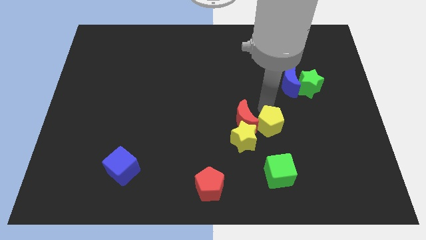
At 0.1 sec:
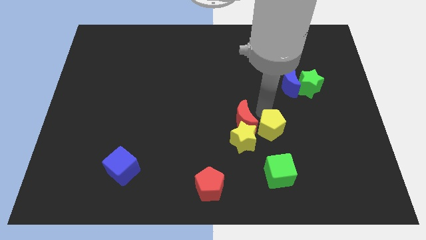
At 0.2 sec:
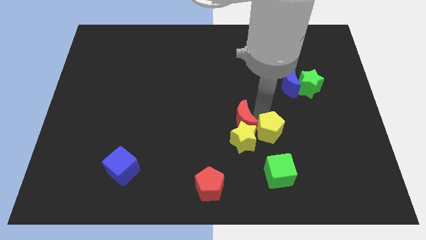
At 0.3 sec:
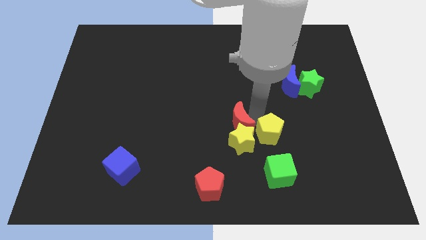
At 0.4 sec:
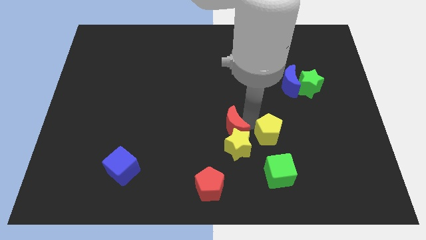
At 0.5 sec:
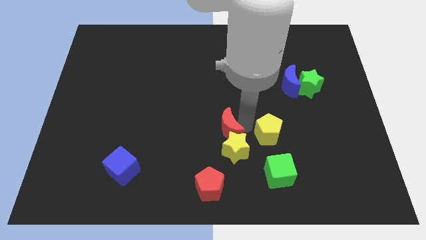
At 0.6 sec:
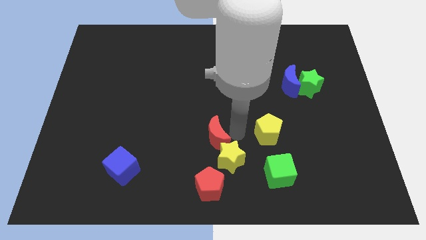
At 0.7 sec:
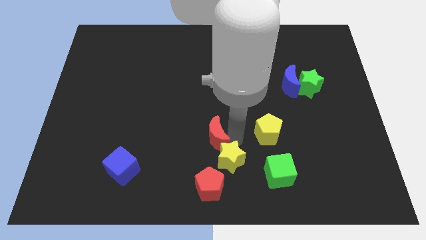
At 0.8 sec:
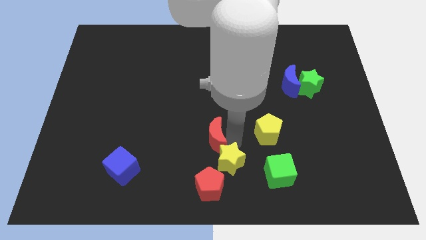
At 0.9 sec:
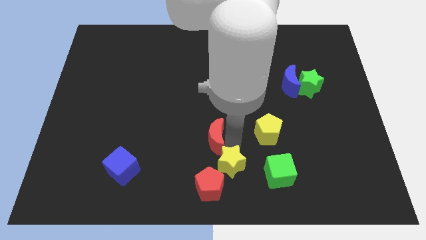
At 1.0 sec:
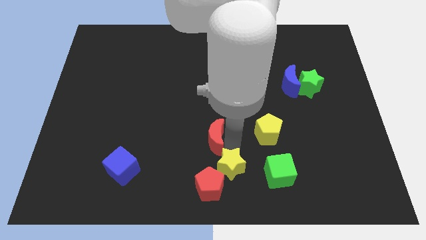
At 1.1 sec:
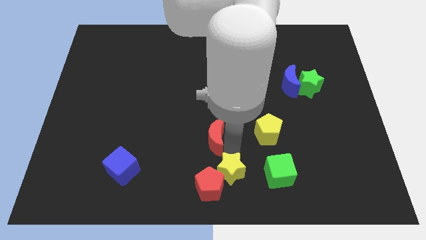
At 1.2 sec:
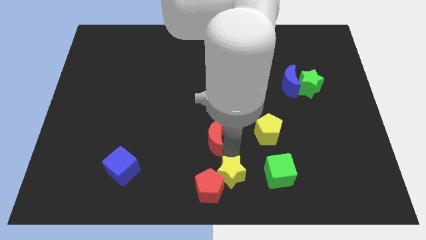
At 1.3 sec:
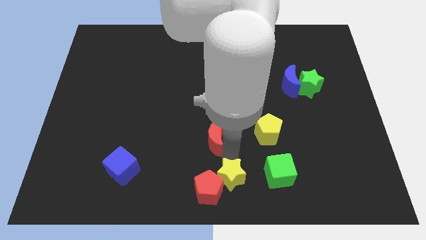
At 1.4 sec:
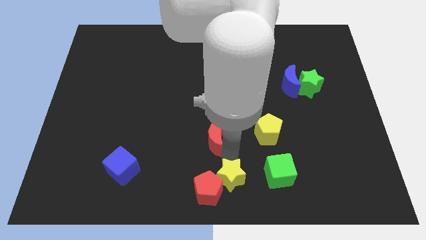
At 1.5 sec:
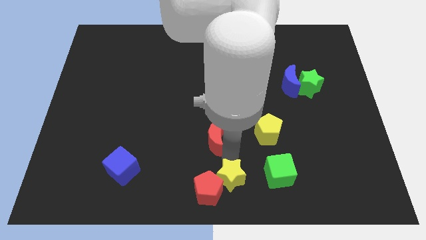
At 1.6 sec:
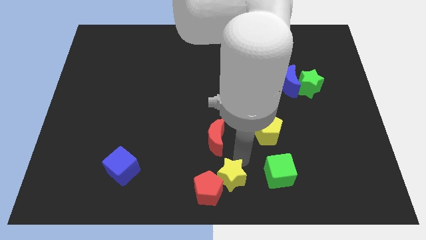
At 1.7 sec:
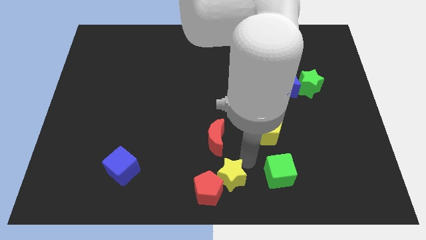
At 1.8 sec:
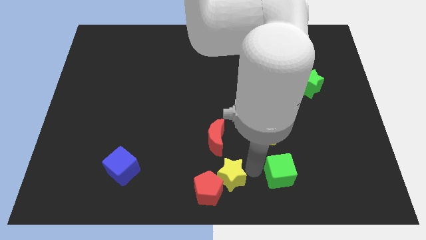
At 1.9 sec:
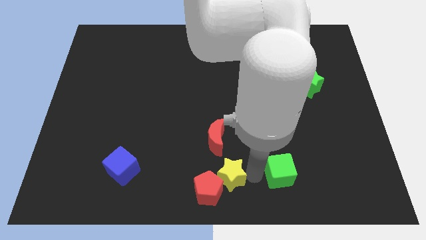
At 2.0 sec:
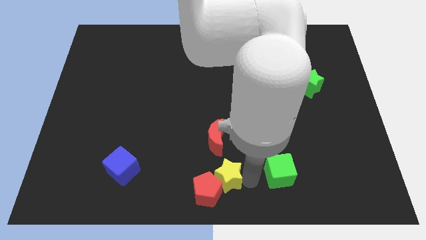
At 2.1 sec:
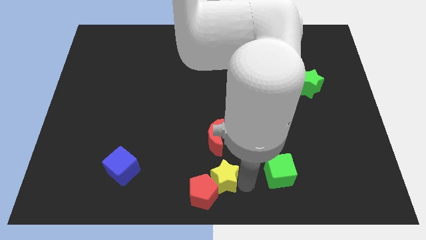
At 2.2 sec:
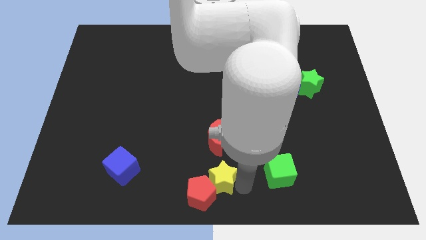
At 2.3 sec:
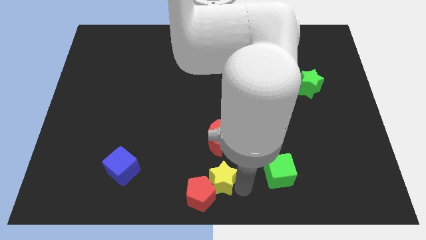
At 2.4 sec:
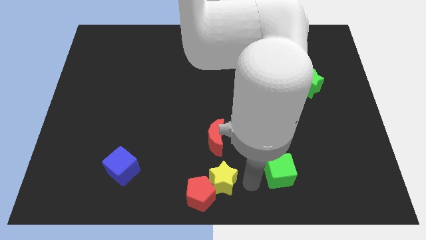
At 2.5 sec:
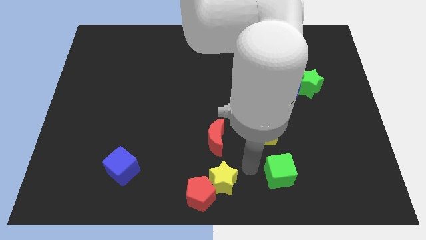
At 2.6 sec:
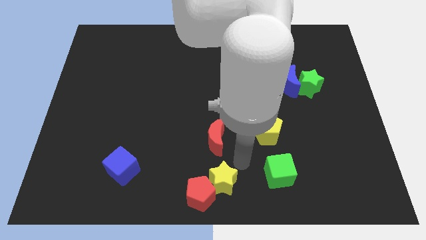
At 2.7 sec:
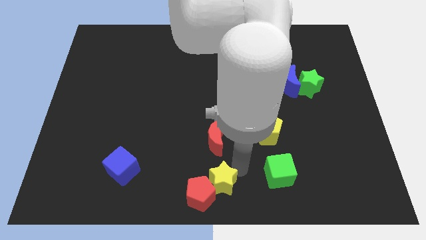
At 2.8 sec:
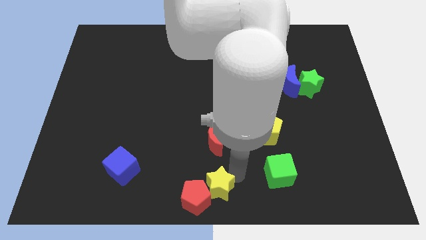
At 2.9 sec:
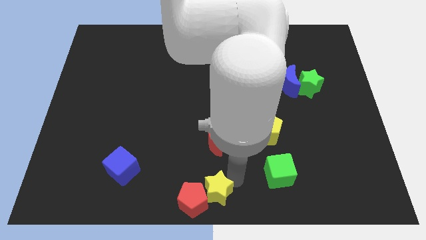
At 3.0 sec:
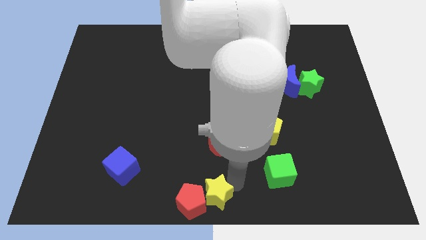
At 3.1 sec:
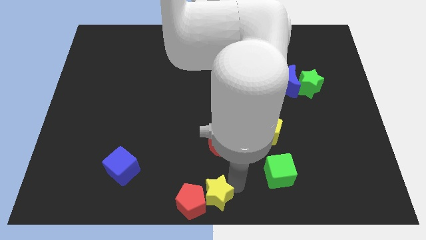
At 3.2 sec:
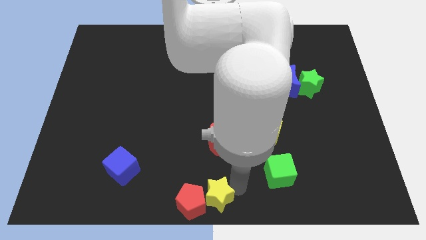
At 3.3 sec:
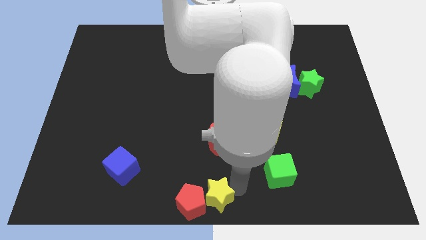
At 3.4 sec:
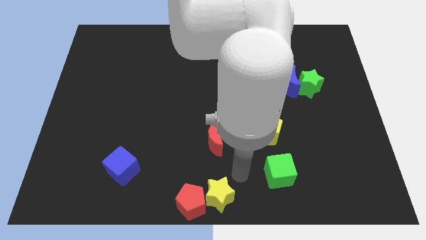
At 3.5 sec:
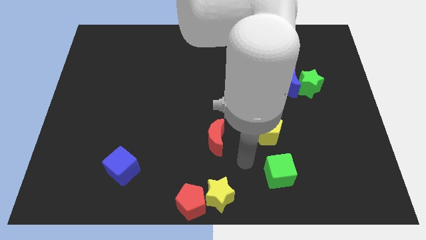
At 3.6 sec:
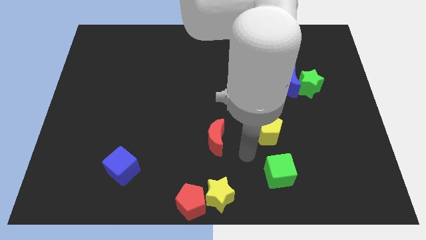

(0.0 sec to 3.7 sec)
place yellow star to the bottom center of the board

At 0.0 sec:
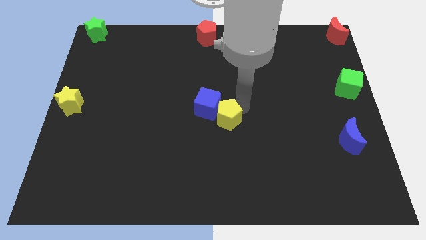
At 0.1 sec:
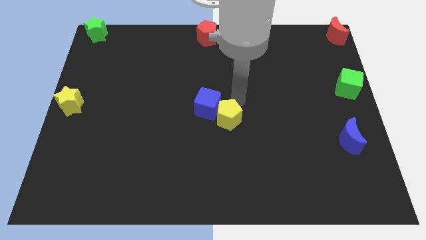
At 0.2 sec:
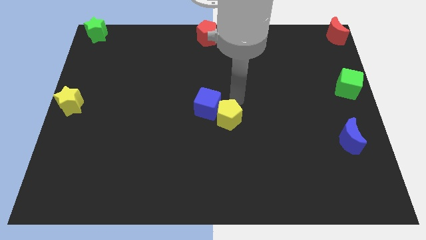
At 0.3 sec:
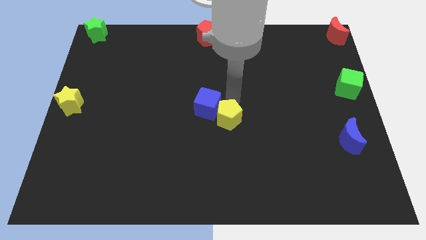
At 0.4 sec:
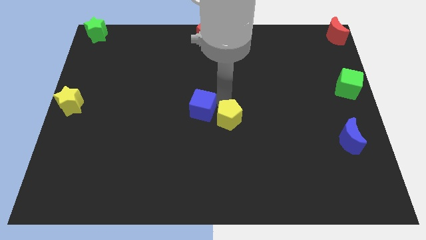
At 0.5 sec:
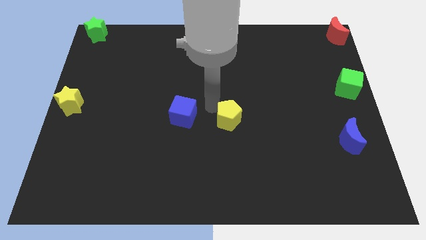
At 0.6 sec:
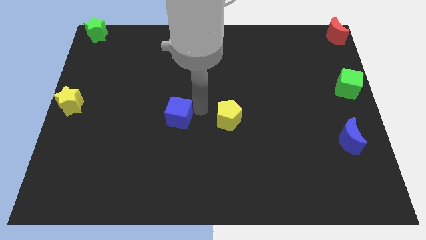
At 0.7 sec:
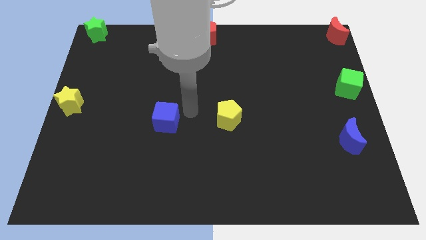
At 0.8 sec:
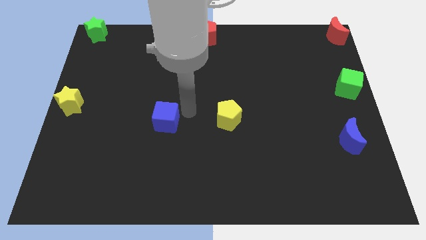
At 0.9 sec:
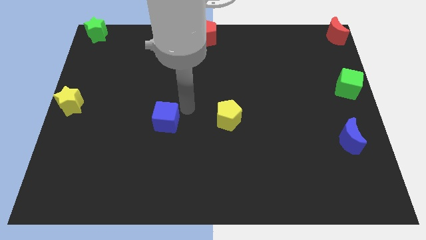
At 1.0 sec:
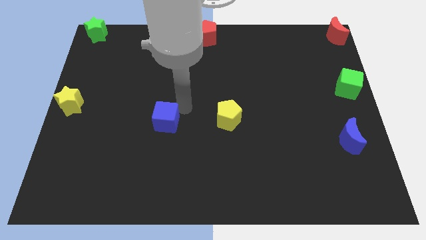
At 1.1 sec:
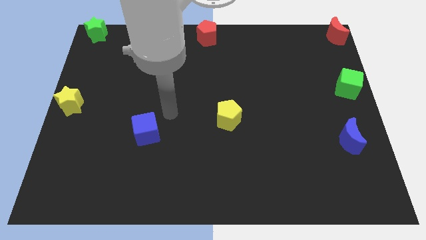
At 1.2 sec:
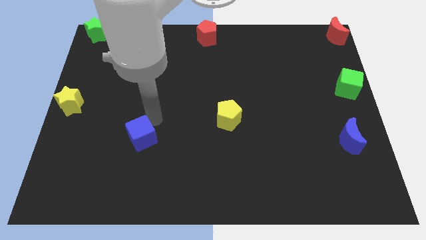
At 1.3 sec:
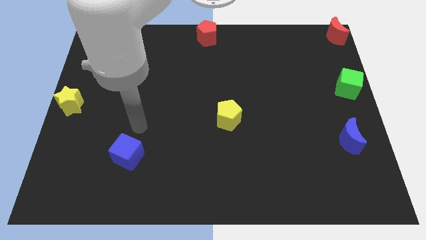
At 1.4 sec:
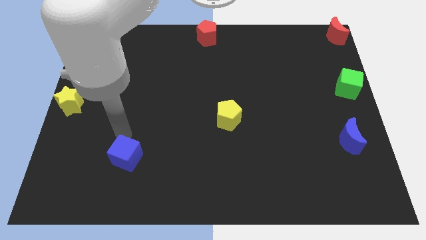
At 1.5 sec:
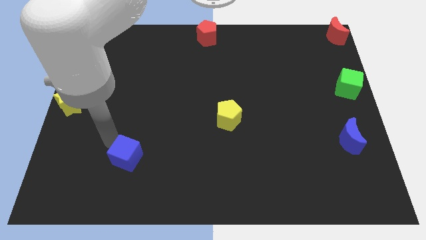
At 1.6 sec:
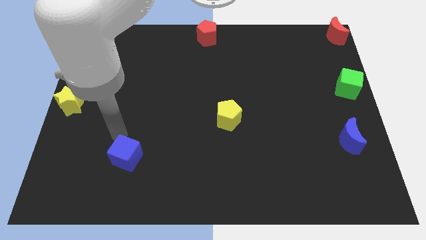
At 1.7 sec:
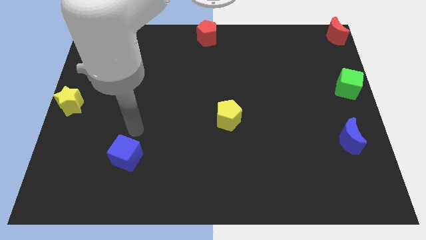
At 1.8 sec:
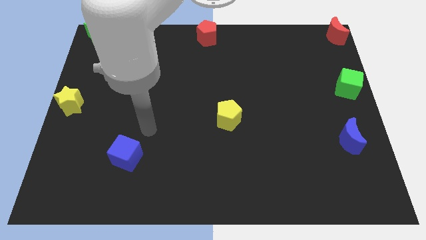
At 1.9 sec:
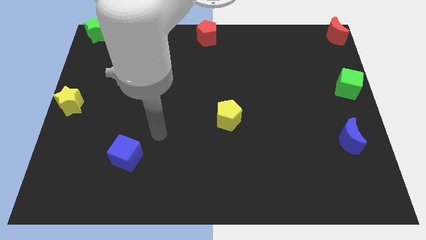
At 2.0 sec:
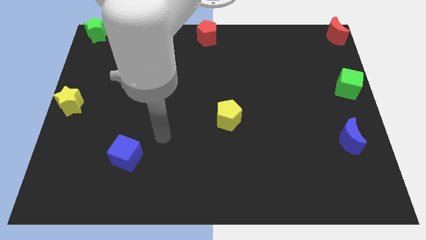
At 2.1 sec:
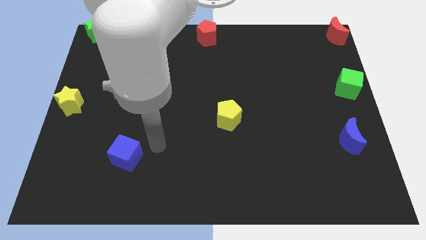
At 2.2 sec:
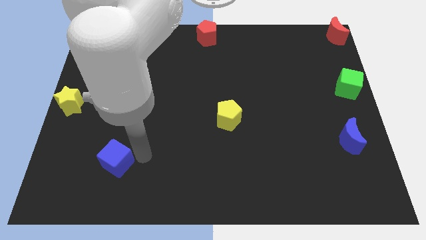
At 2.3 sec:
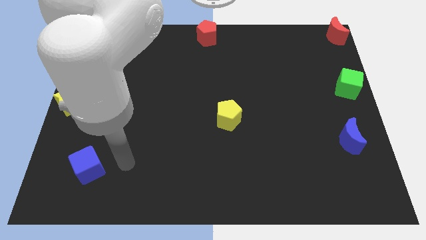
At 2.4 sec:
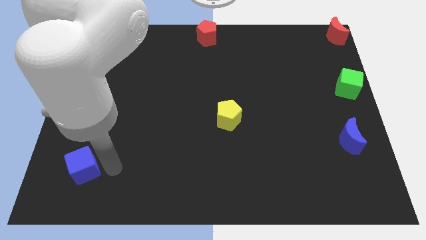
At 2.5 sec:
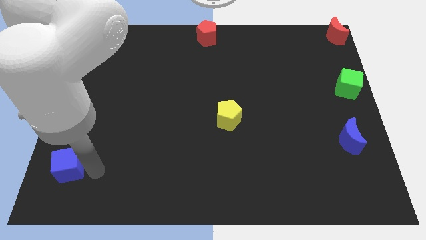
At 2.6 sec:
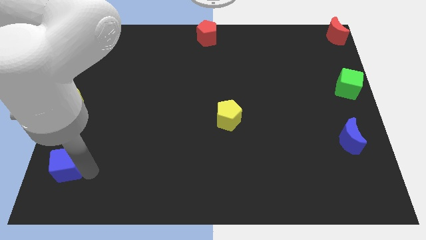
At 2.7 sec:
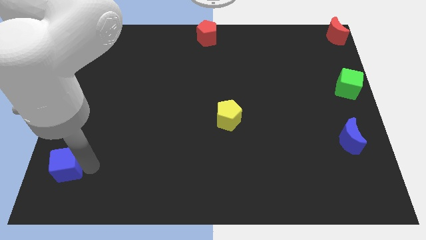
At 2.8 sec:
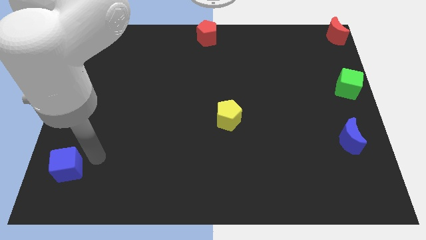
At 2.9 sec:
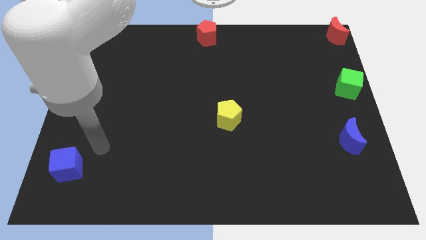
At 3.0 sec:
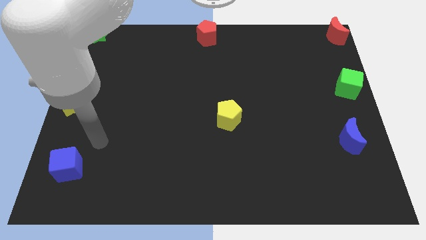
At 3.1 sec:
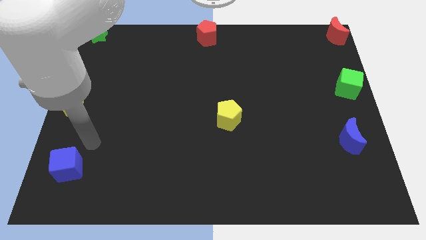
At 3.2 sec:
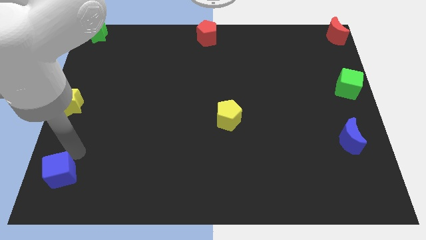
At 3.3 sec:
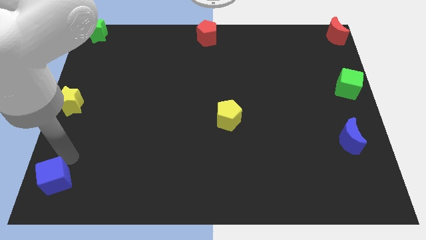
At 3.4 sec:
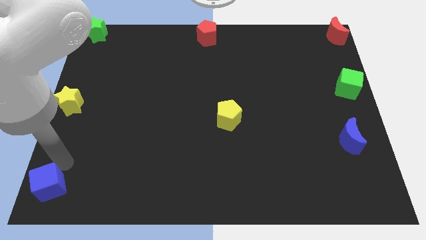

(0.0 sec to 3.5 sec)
separate blue cube from yellow pentagon

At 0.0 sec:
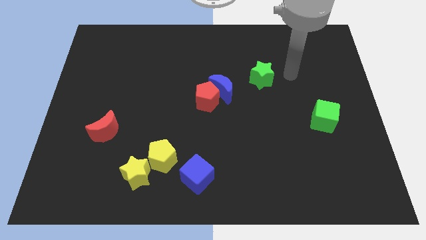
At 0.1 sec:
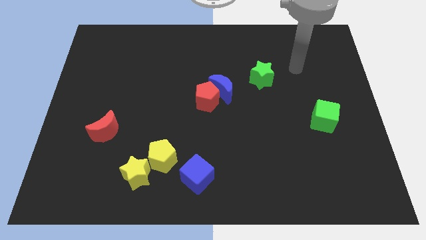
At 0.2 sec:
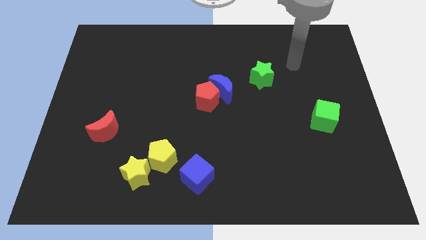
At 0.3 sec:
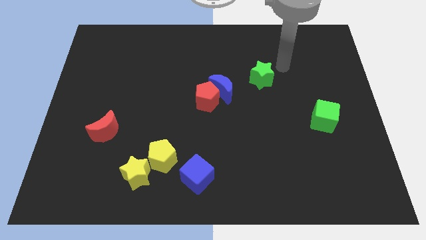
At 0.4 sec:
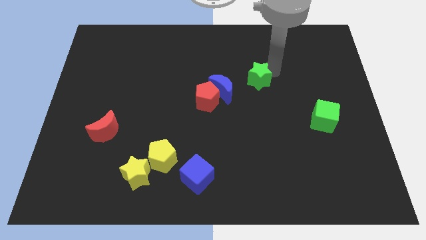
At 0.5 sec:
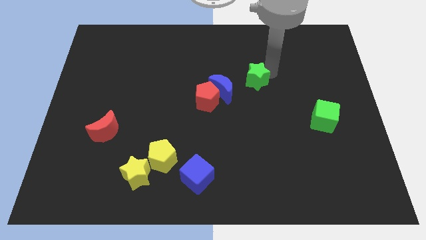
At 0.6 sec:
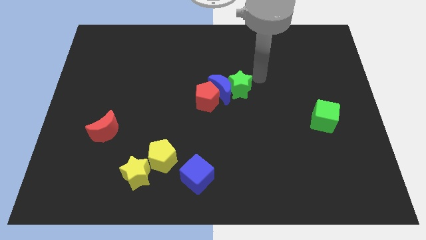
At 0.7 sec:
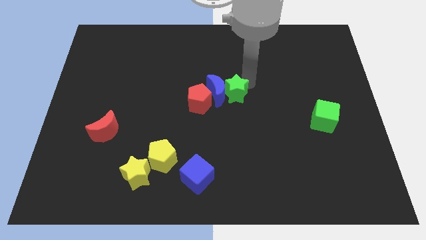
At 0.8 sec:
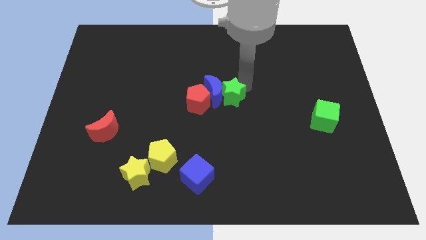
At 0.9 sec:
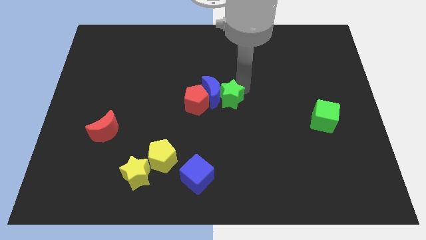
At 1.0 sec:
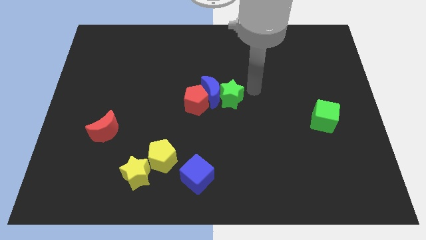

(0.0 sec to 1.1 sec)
move the green star to the right of the blue crescent

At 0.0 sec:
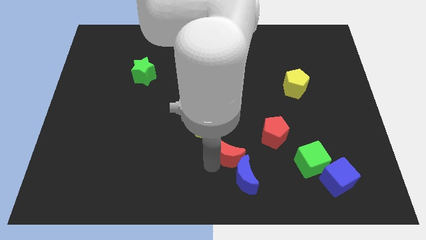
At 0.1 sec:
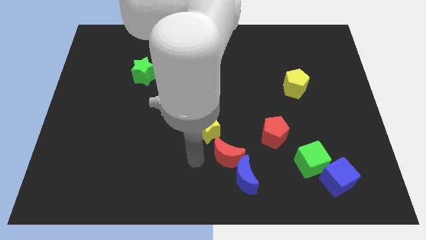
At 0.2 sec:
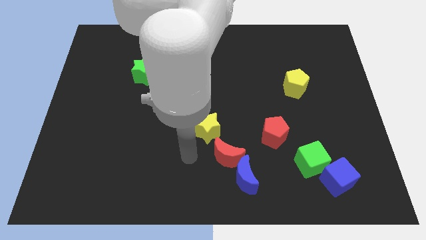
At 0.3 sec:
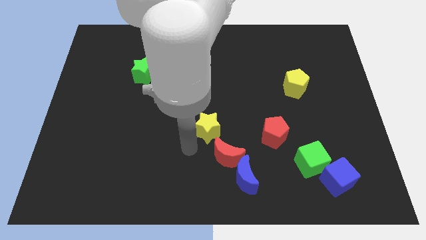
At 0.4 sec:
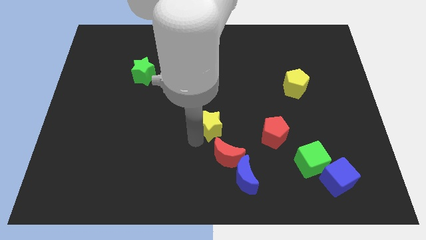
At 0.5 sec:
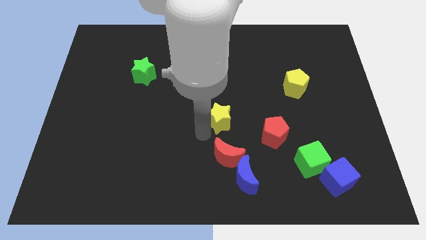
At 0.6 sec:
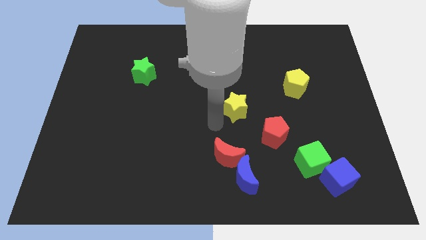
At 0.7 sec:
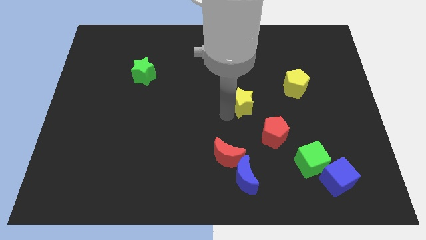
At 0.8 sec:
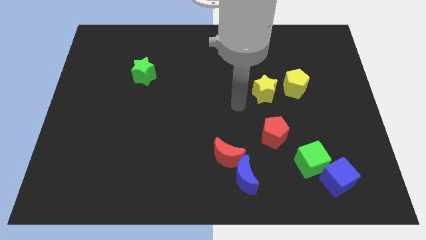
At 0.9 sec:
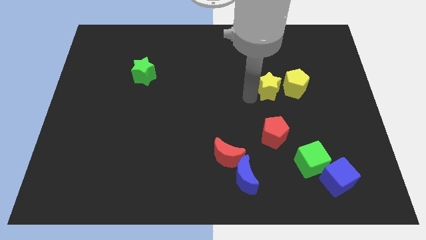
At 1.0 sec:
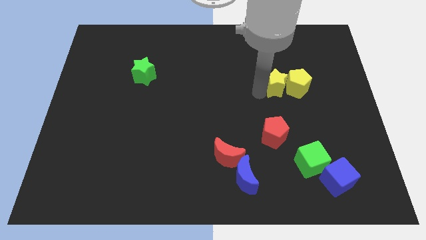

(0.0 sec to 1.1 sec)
separate the yellow star from the red crescent
